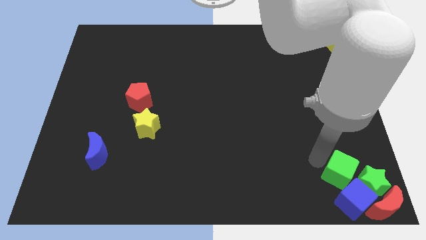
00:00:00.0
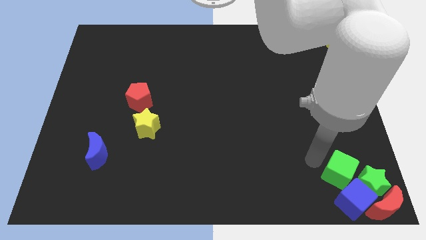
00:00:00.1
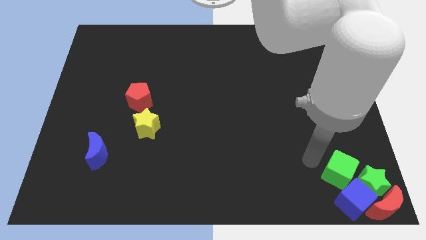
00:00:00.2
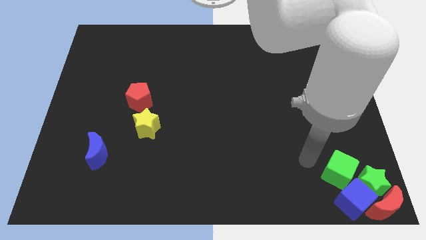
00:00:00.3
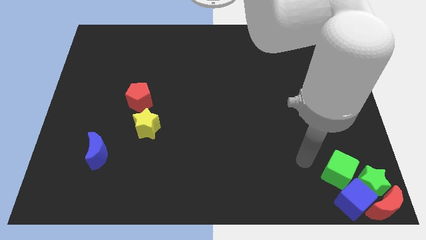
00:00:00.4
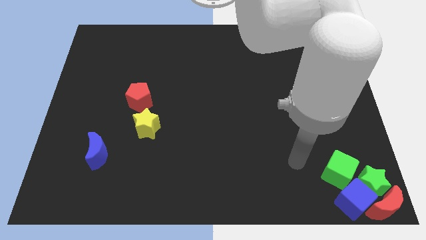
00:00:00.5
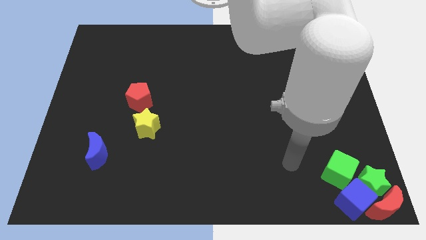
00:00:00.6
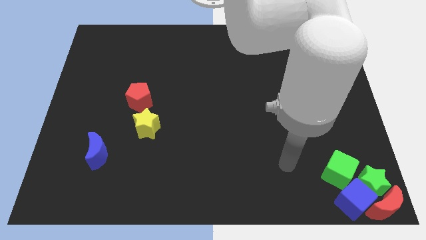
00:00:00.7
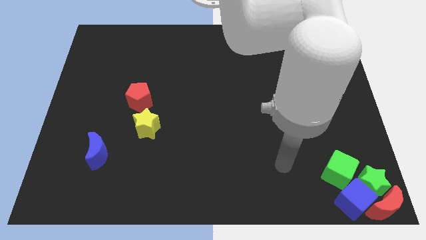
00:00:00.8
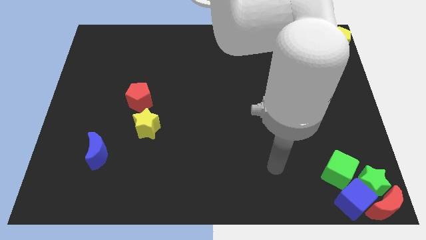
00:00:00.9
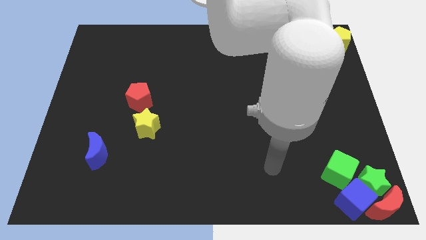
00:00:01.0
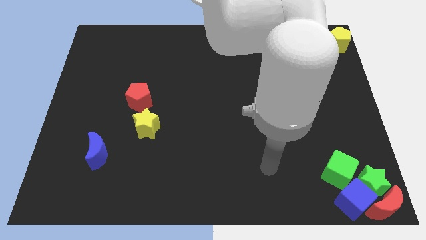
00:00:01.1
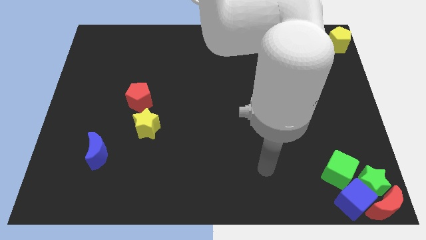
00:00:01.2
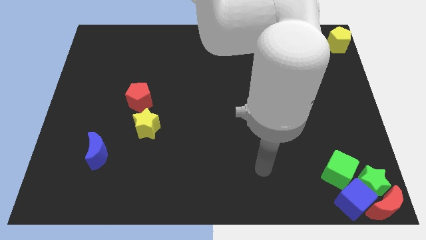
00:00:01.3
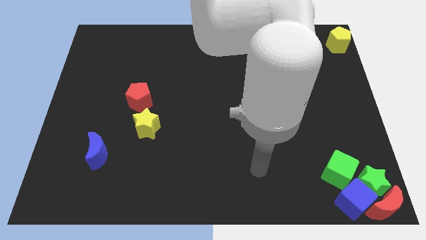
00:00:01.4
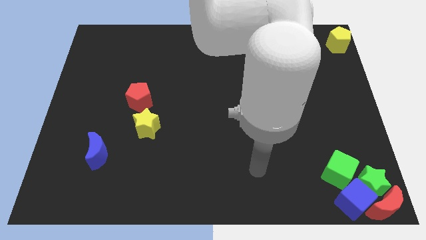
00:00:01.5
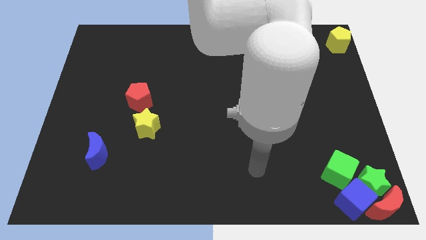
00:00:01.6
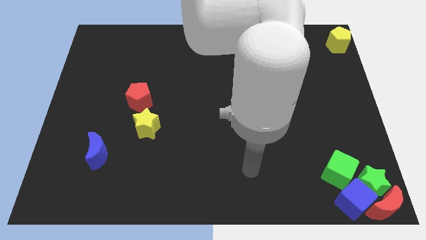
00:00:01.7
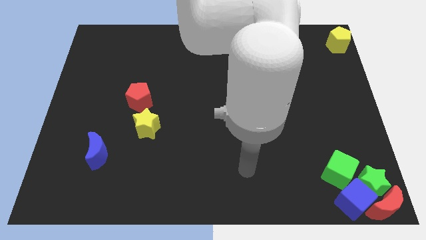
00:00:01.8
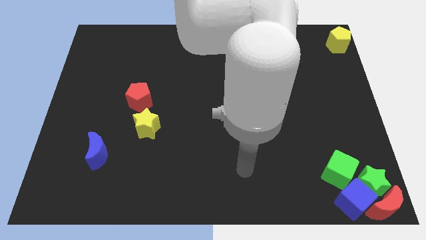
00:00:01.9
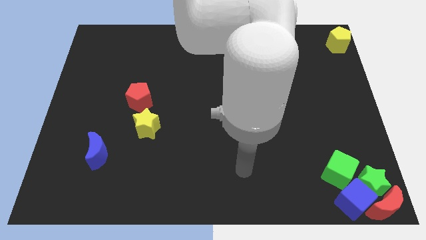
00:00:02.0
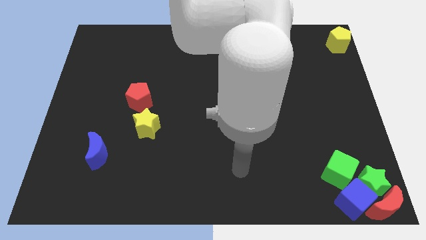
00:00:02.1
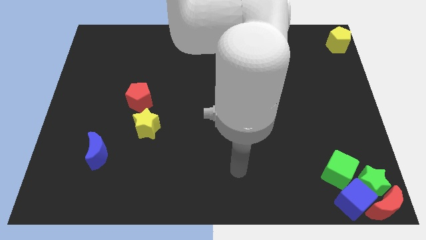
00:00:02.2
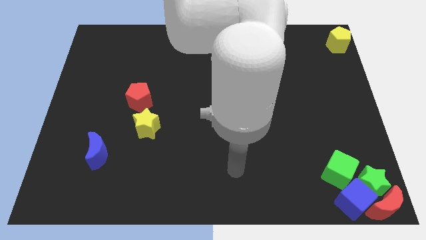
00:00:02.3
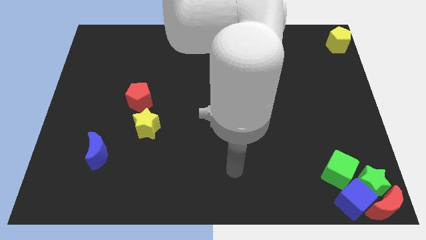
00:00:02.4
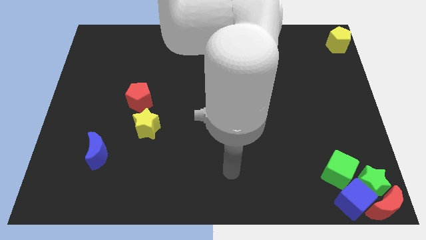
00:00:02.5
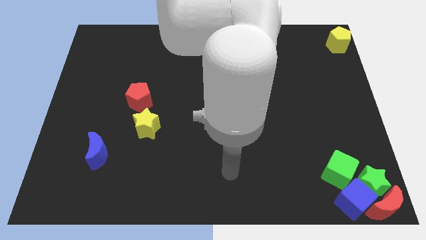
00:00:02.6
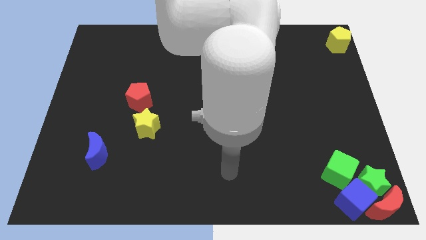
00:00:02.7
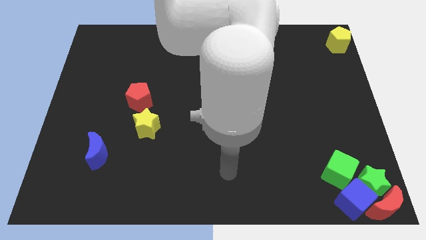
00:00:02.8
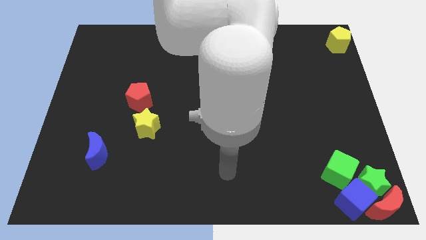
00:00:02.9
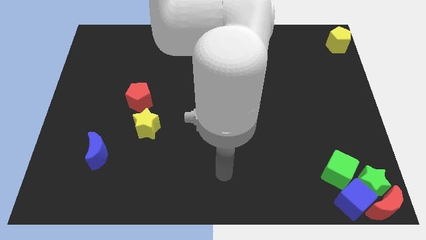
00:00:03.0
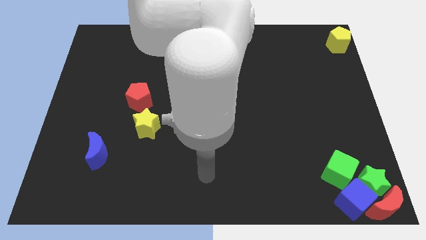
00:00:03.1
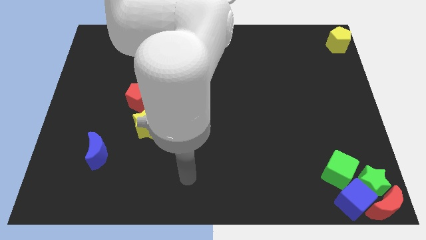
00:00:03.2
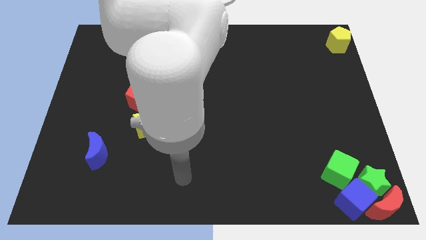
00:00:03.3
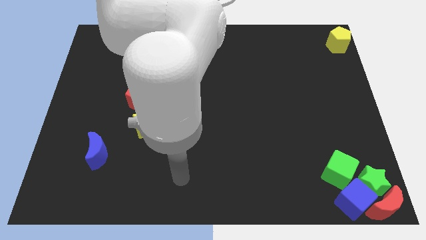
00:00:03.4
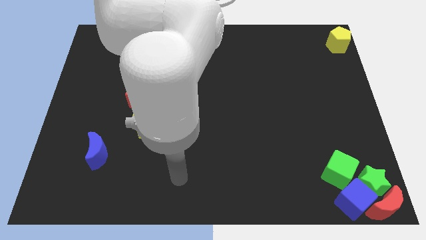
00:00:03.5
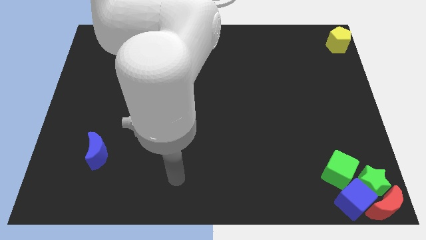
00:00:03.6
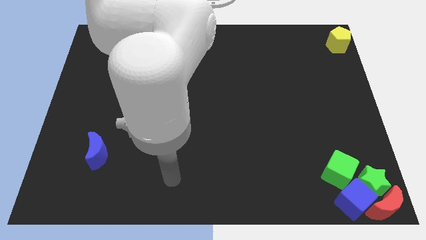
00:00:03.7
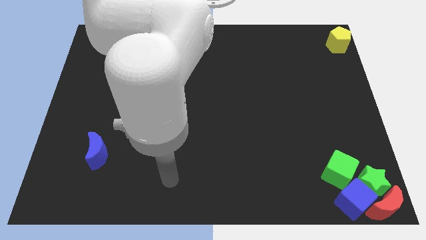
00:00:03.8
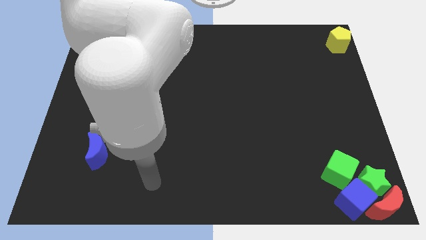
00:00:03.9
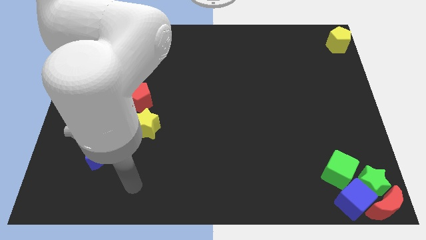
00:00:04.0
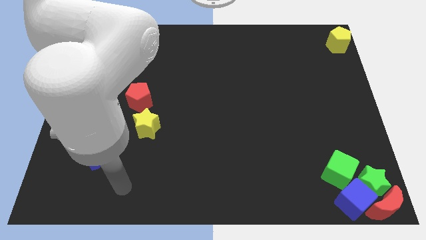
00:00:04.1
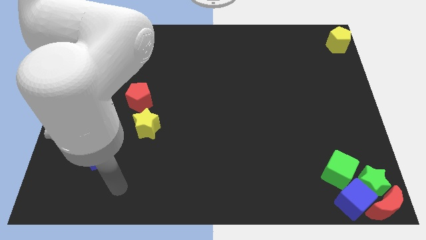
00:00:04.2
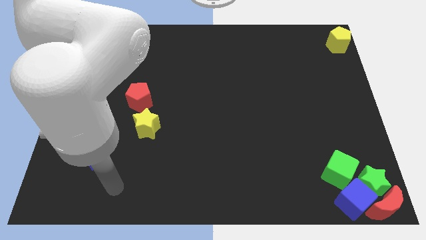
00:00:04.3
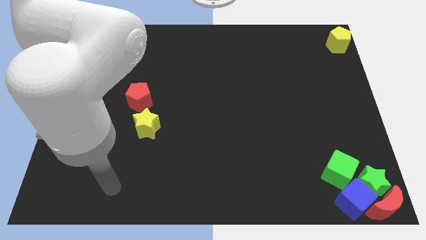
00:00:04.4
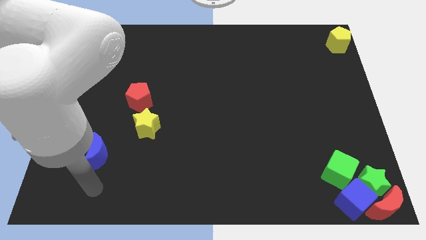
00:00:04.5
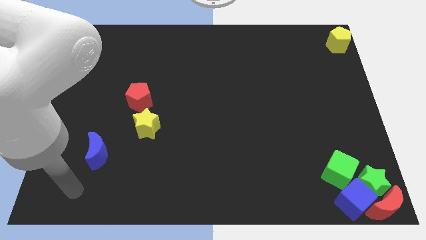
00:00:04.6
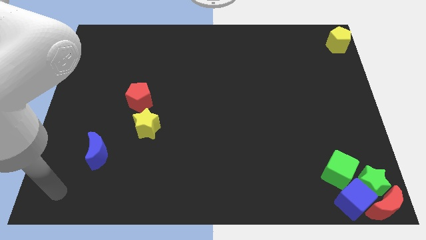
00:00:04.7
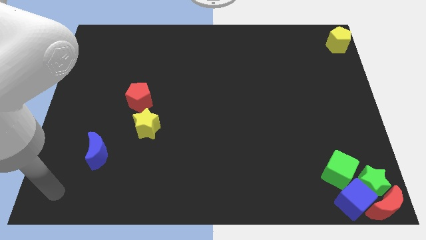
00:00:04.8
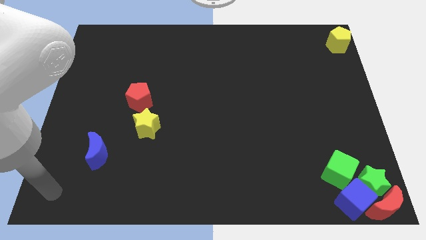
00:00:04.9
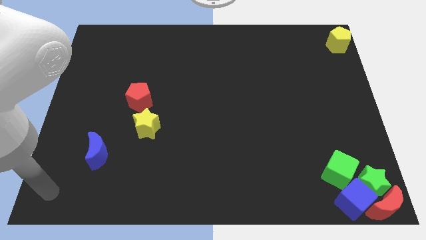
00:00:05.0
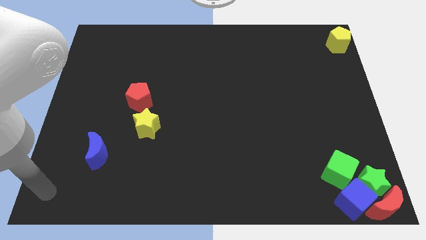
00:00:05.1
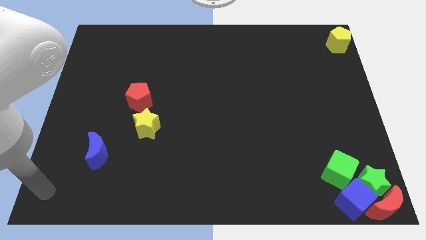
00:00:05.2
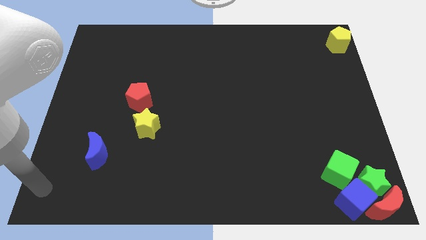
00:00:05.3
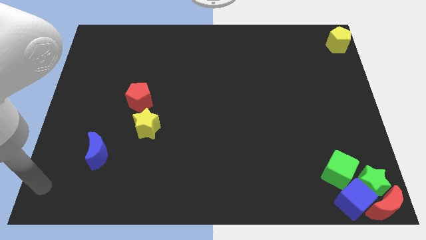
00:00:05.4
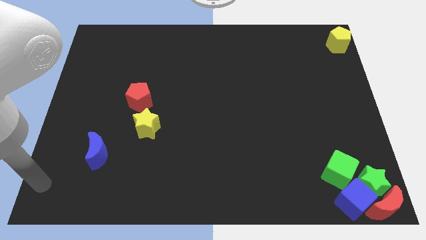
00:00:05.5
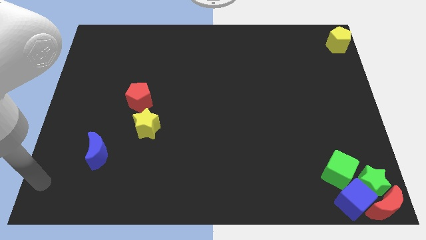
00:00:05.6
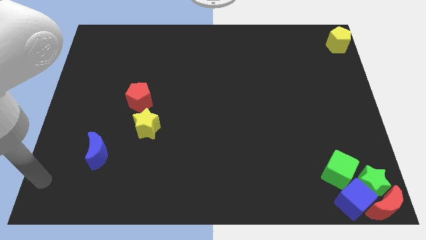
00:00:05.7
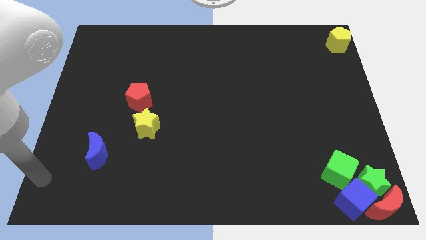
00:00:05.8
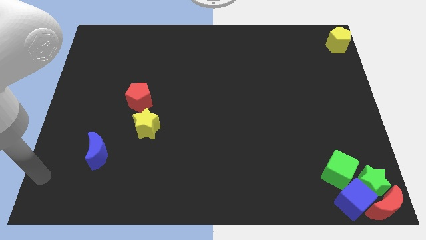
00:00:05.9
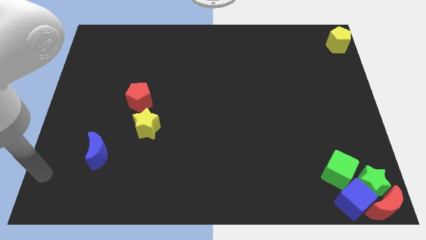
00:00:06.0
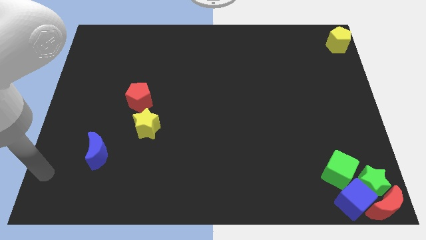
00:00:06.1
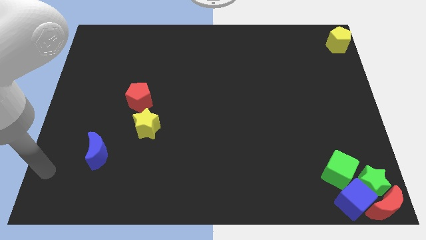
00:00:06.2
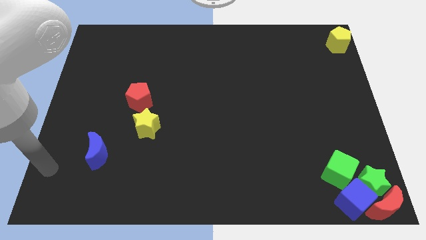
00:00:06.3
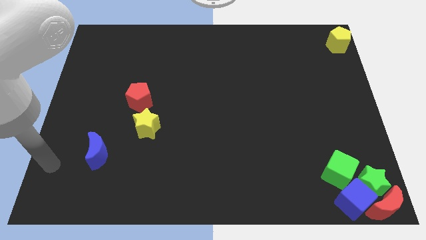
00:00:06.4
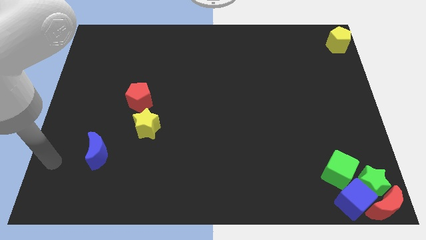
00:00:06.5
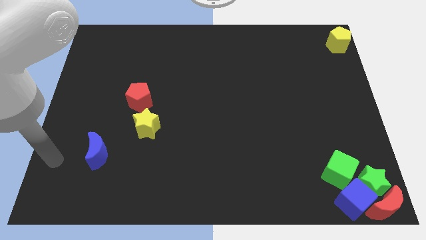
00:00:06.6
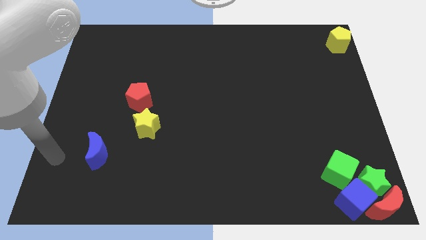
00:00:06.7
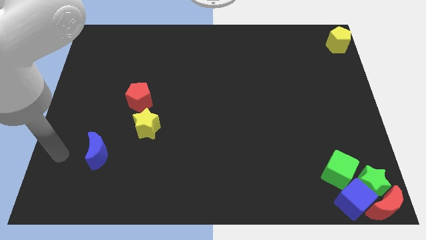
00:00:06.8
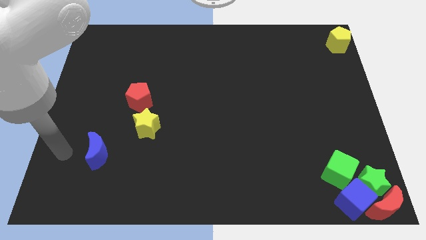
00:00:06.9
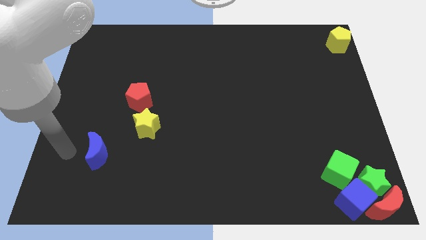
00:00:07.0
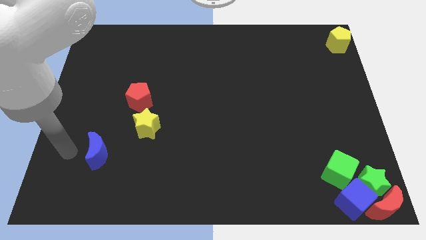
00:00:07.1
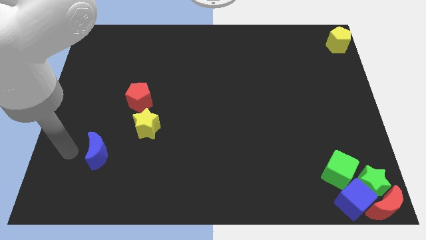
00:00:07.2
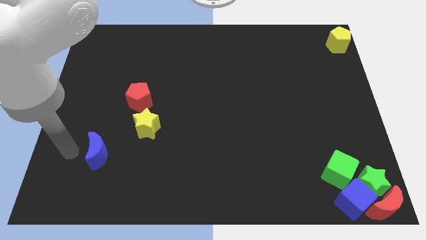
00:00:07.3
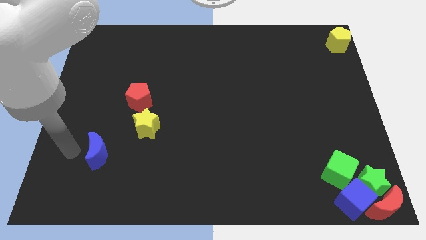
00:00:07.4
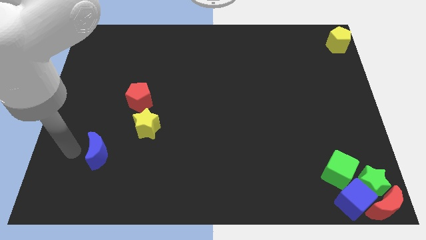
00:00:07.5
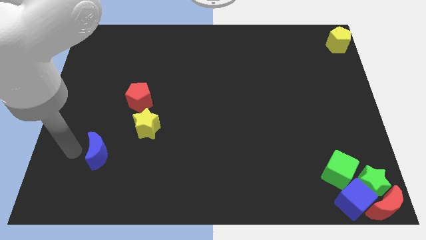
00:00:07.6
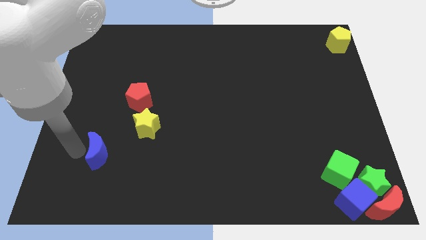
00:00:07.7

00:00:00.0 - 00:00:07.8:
place your arm at the left of the blue crescent

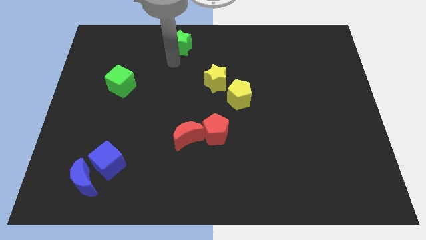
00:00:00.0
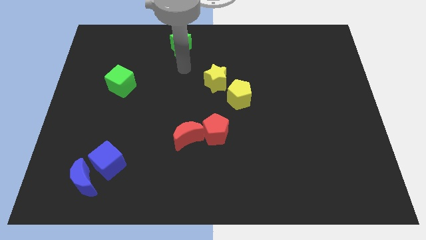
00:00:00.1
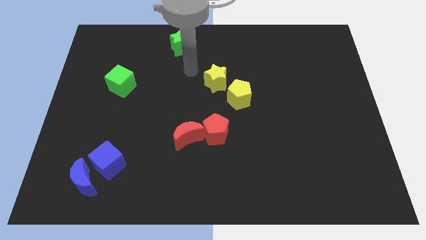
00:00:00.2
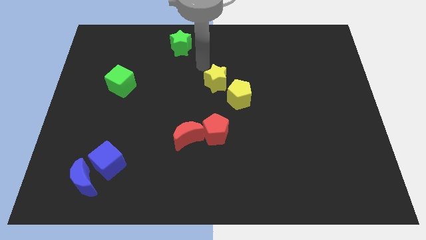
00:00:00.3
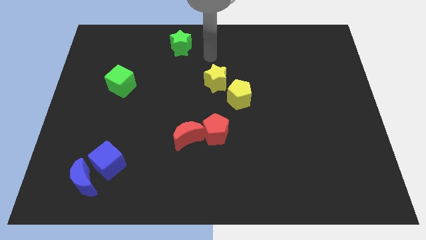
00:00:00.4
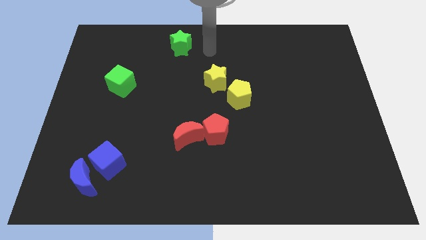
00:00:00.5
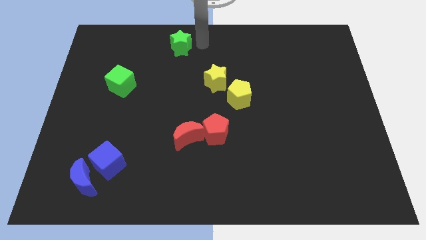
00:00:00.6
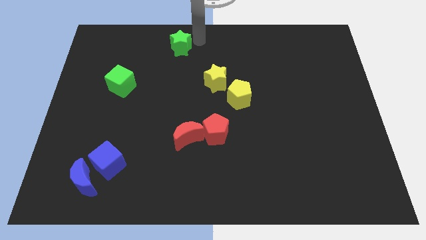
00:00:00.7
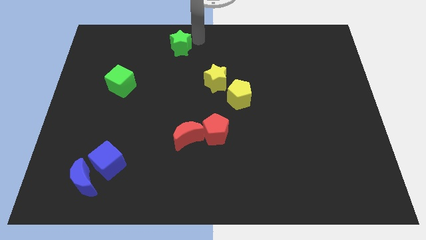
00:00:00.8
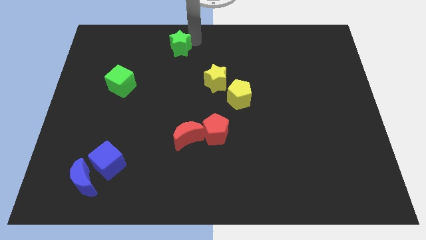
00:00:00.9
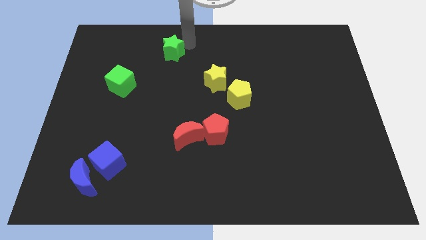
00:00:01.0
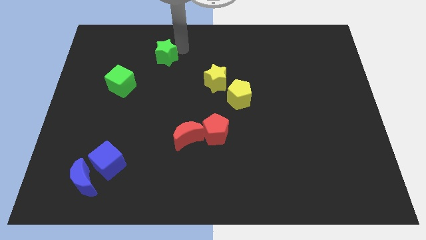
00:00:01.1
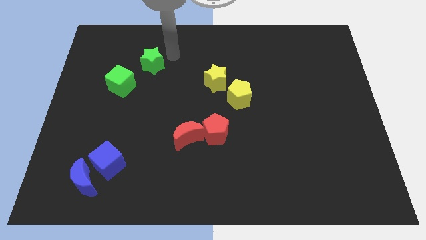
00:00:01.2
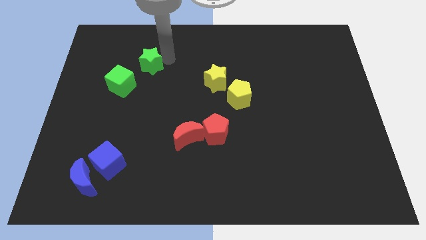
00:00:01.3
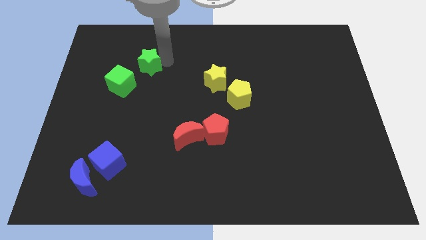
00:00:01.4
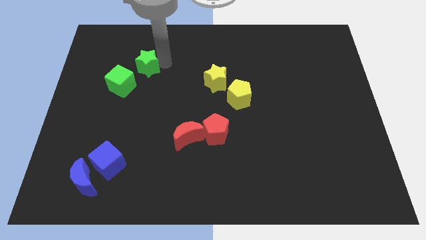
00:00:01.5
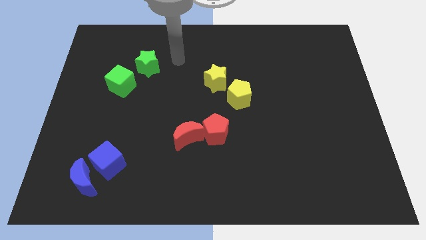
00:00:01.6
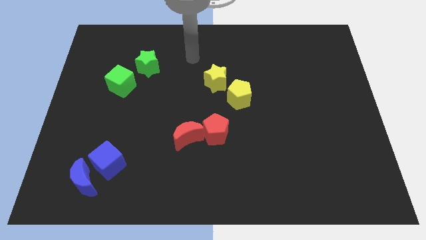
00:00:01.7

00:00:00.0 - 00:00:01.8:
push the green star towards the green cube
